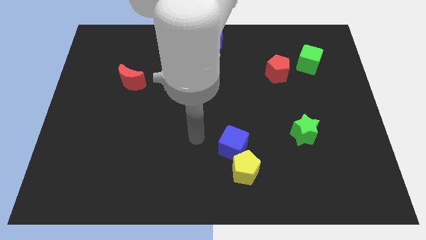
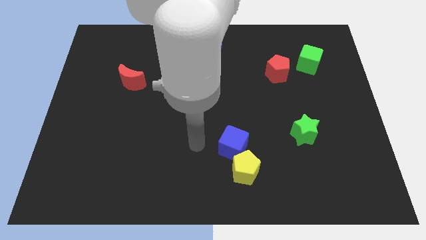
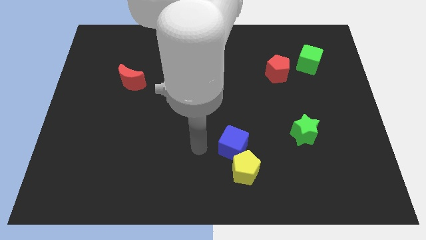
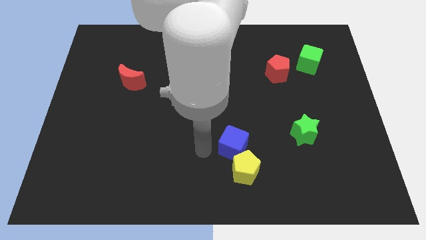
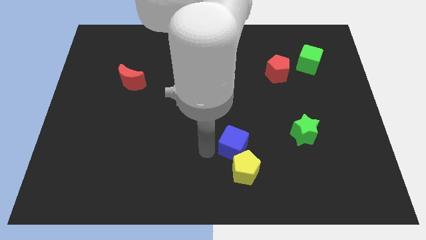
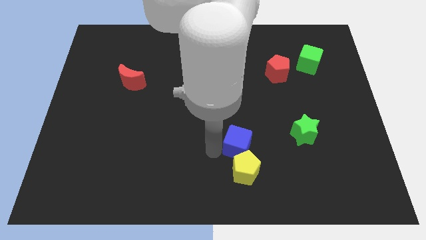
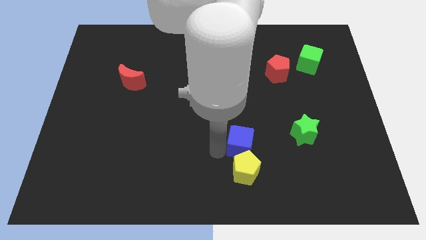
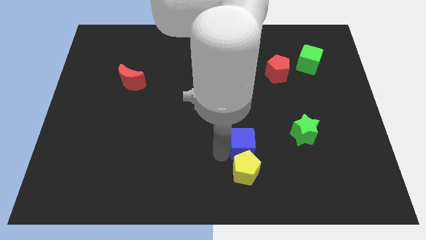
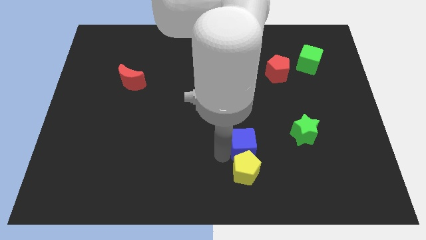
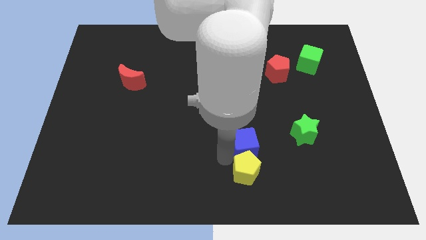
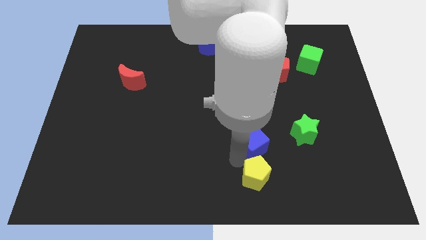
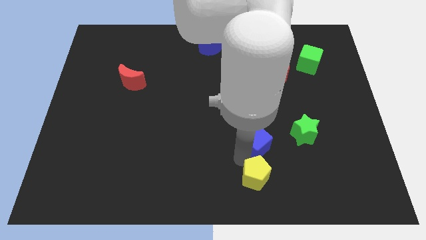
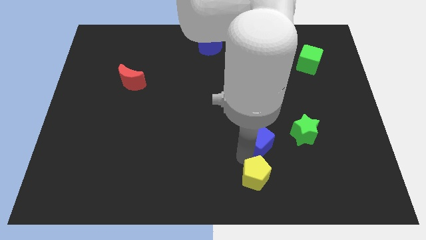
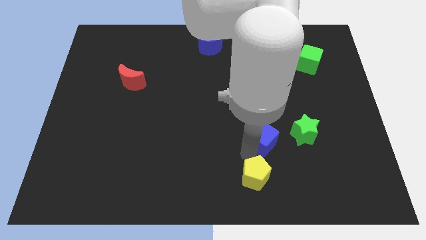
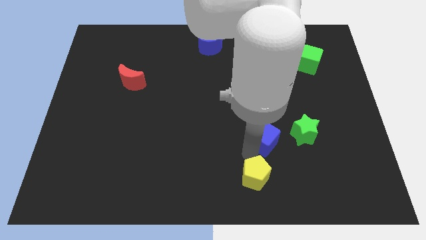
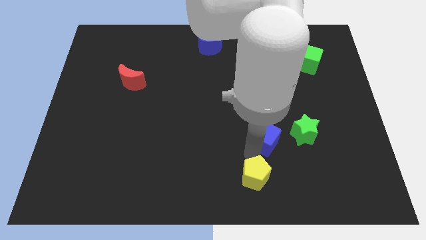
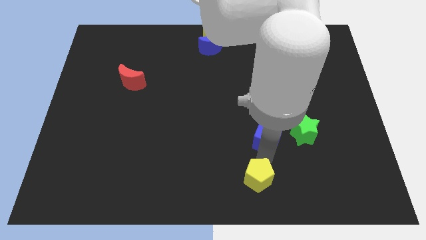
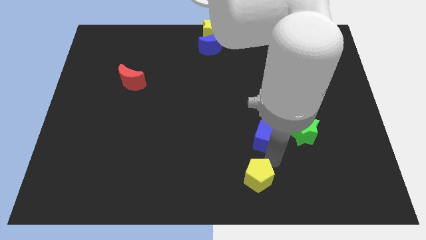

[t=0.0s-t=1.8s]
separate the blue cube from the yellow pentagon

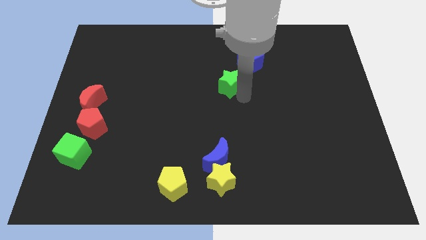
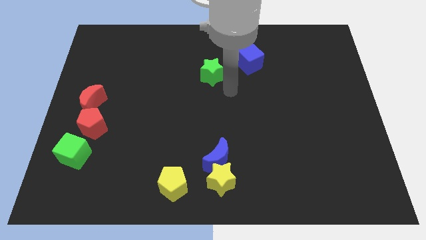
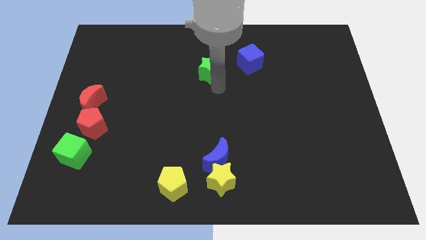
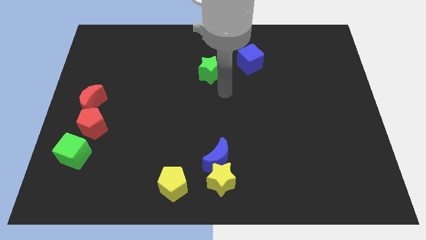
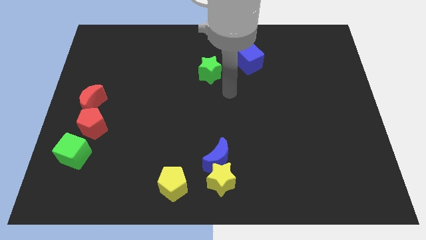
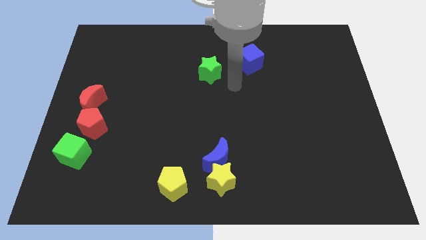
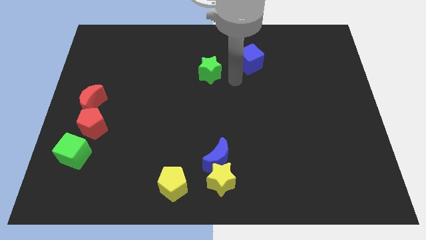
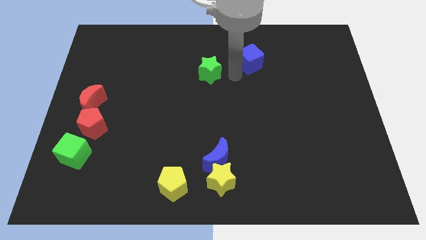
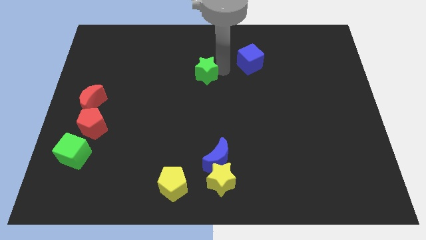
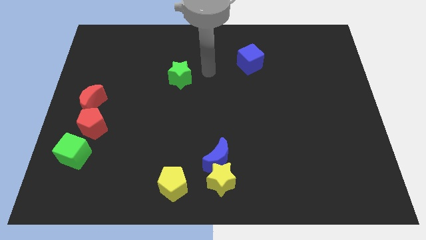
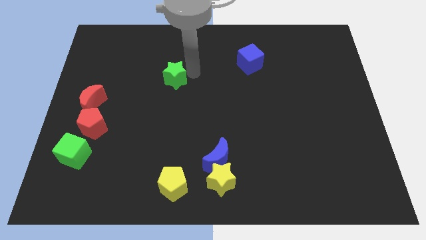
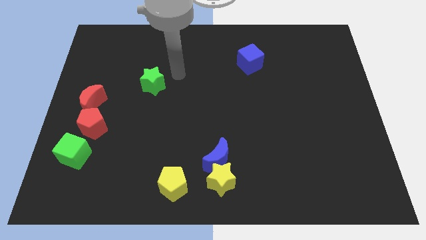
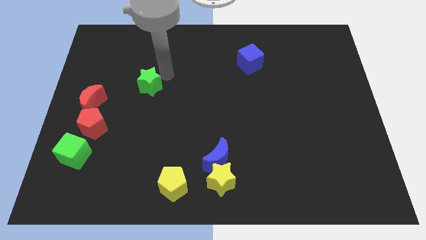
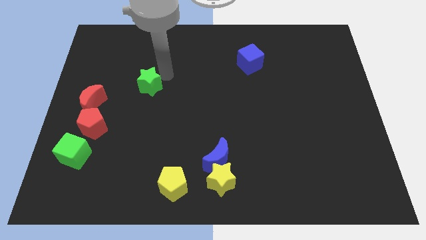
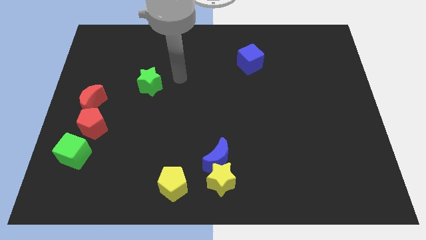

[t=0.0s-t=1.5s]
move the green star slightly to the left side

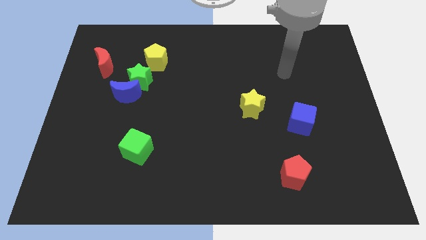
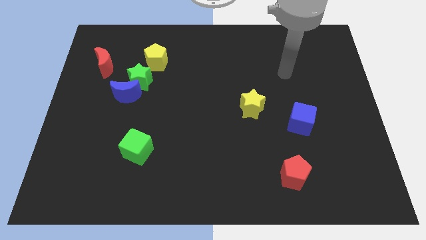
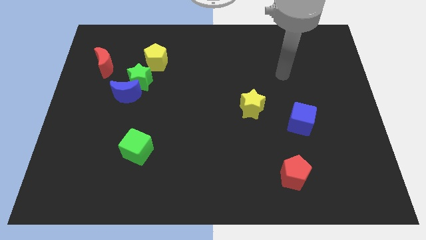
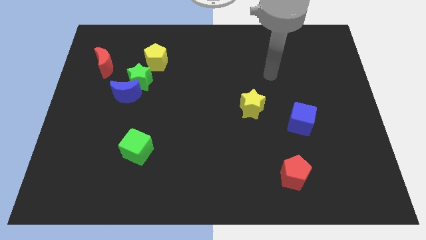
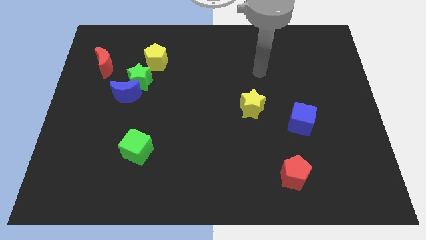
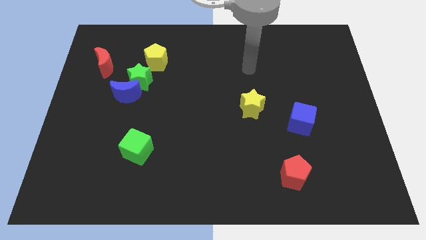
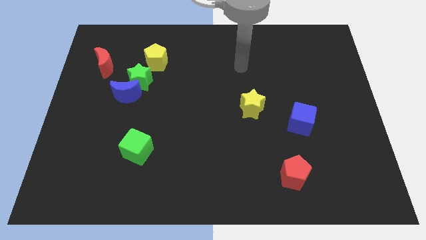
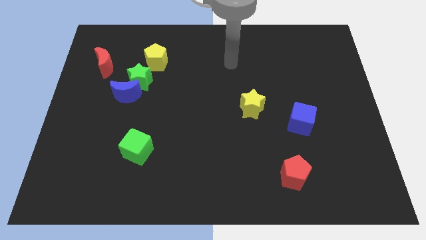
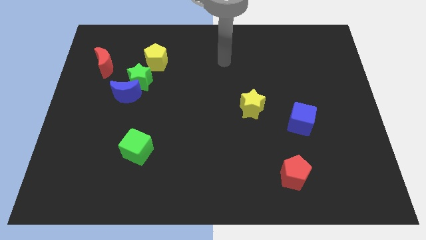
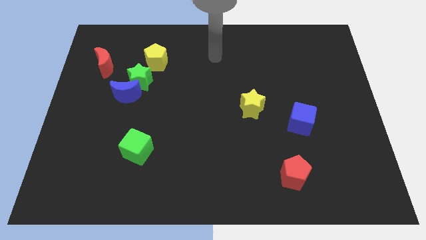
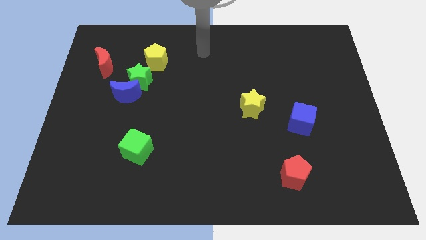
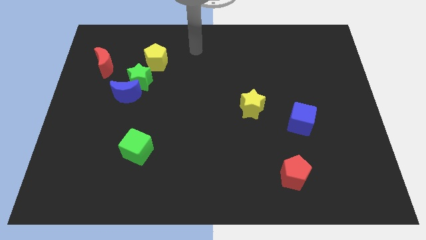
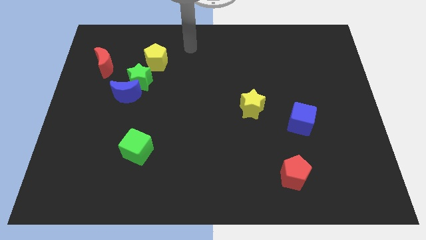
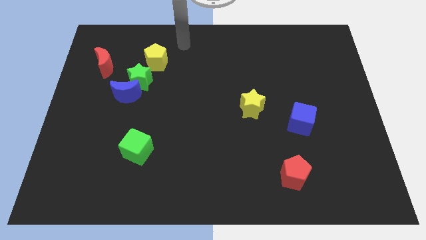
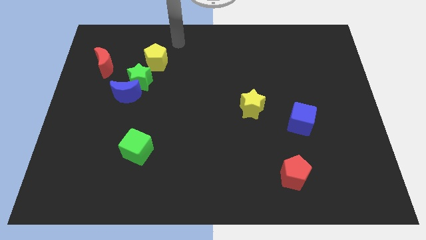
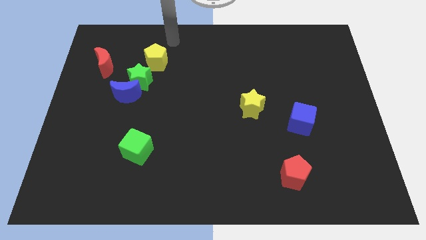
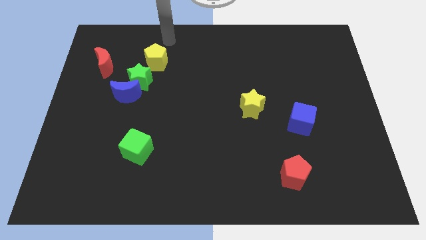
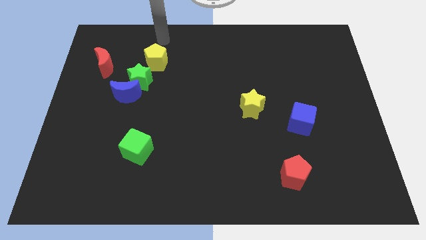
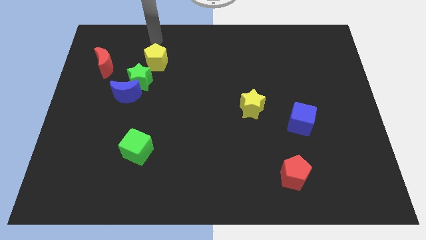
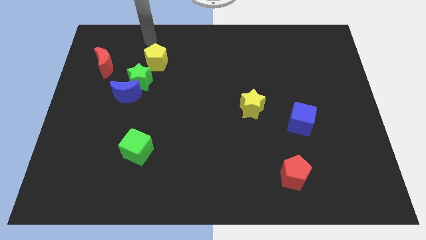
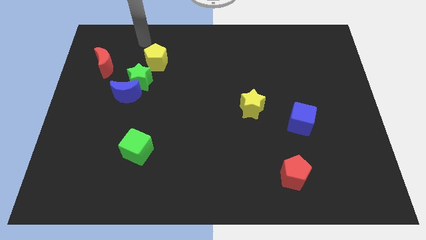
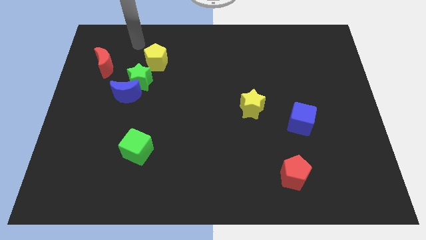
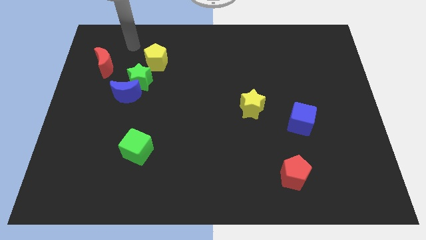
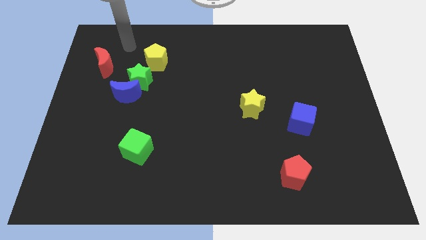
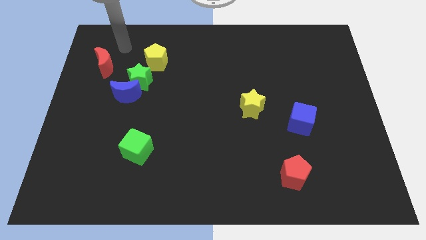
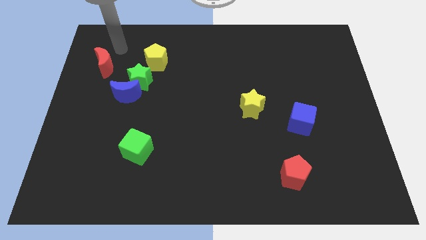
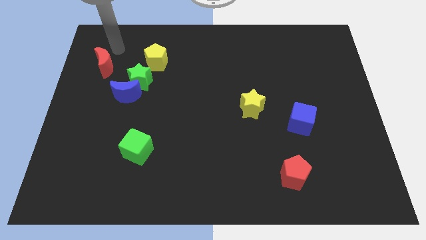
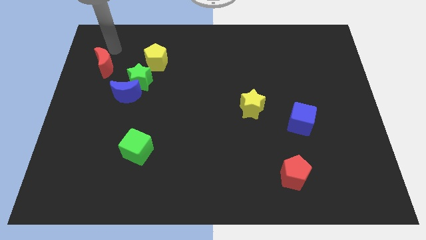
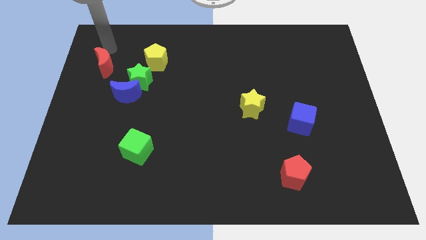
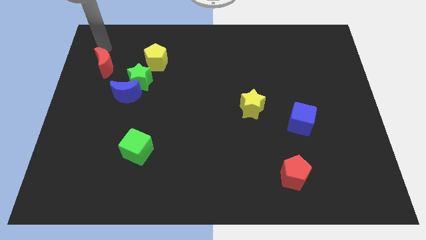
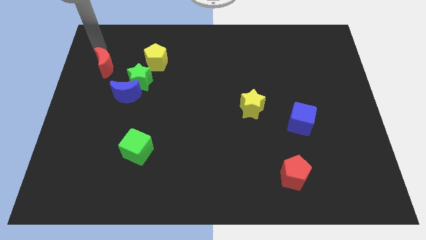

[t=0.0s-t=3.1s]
move your arm on top of red moon

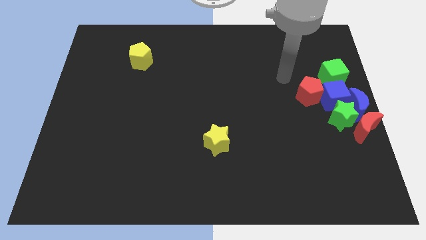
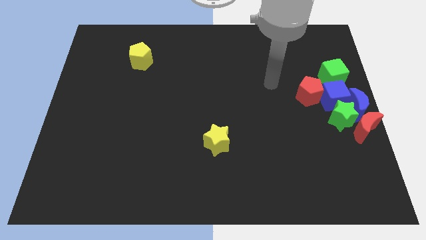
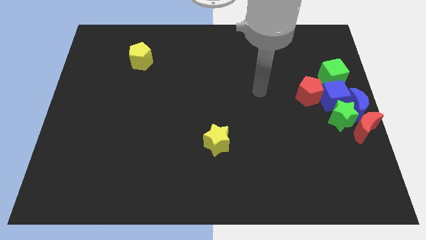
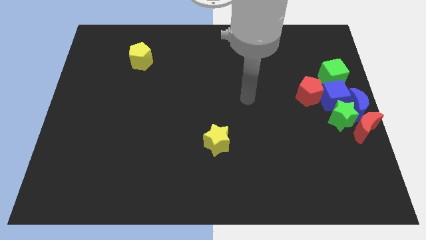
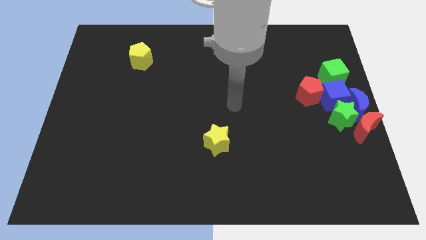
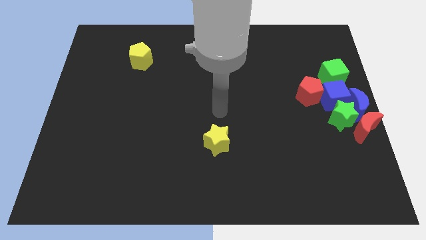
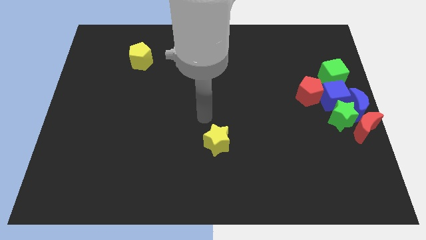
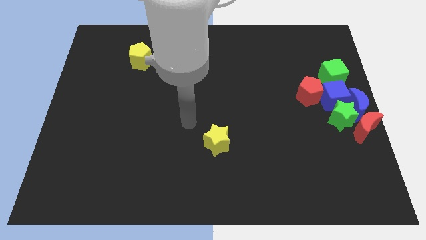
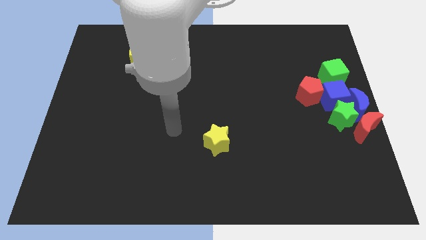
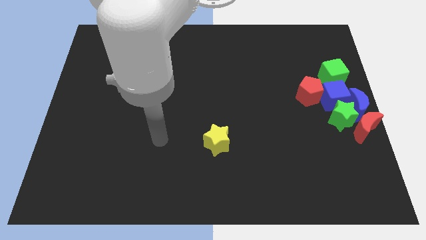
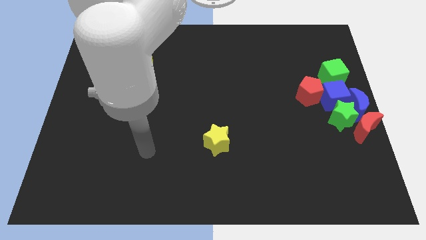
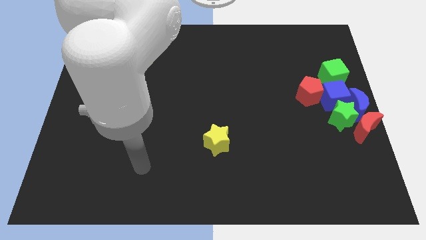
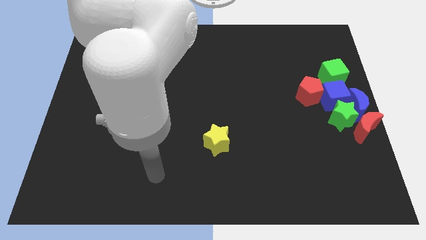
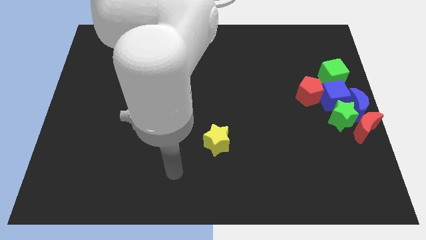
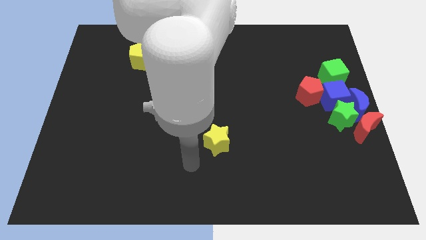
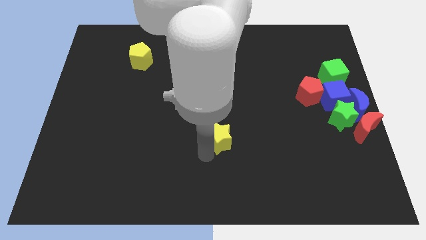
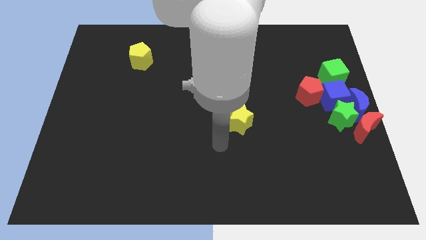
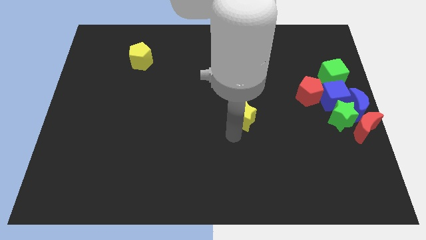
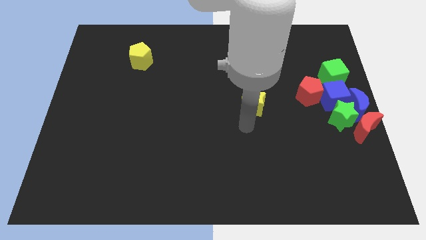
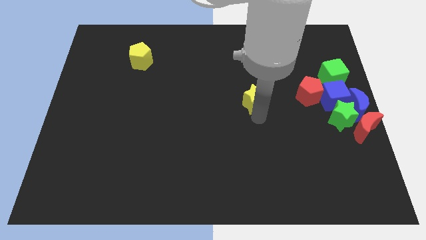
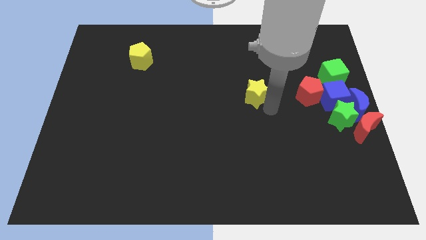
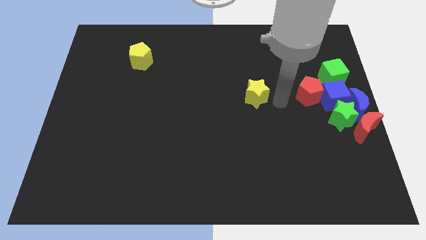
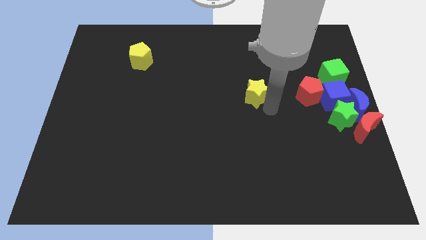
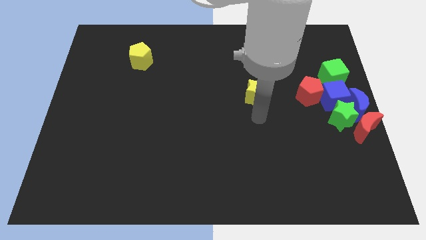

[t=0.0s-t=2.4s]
move yellow star to the left of the red pentagon

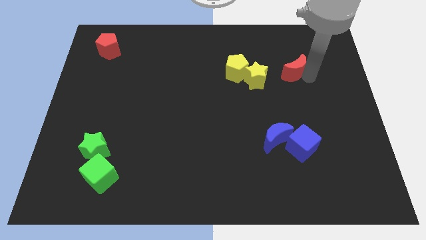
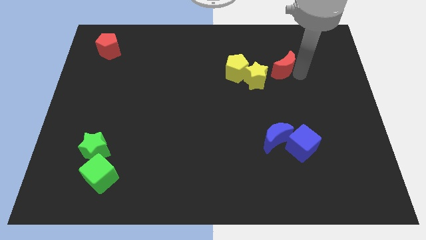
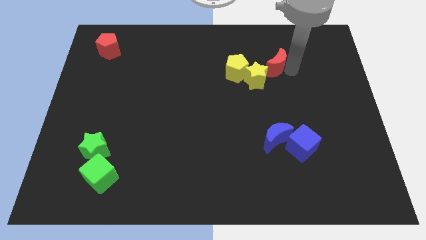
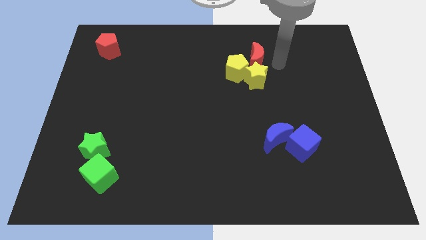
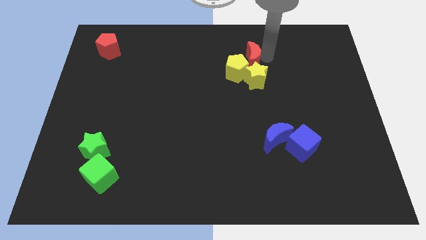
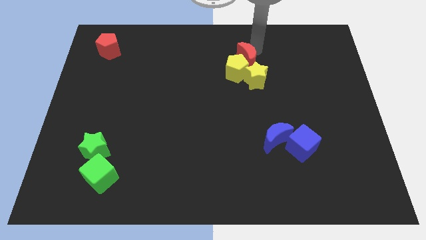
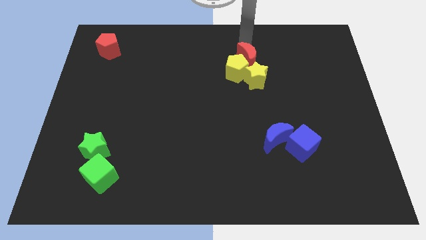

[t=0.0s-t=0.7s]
place the red crescent to the top of yellow pentagon
